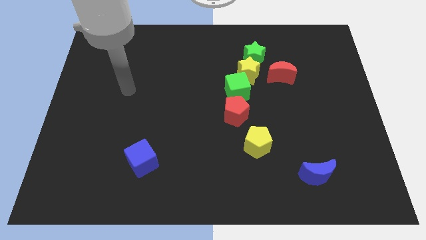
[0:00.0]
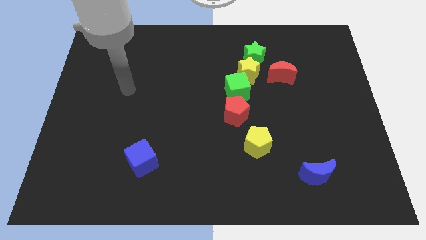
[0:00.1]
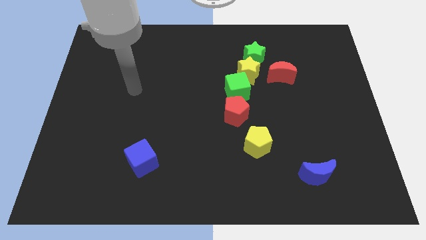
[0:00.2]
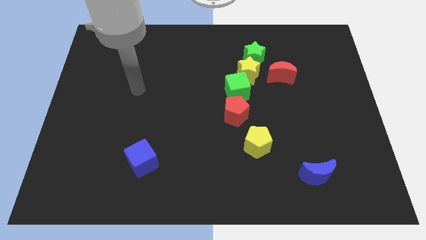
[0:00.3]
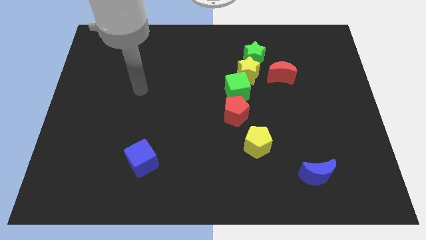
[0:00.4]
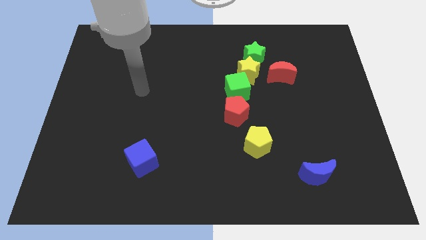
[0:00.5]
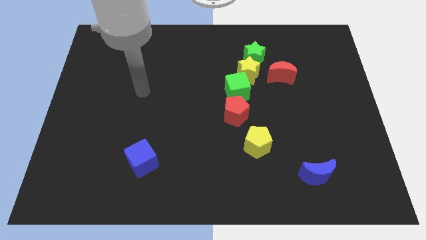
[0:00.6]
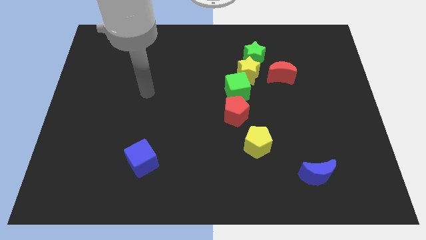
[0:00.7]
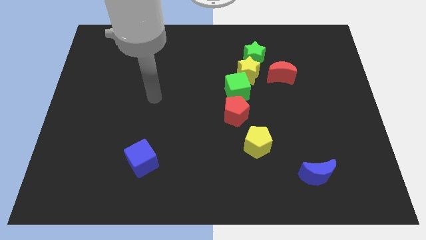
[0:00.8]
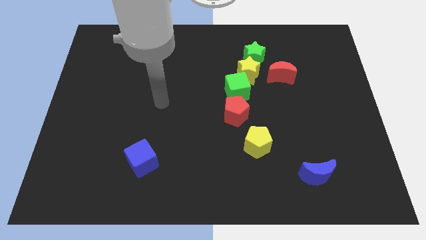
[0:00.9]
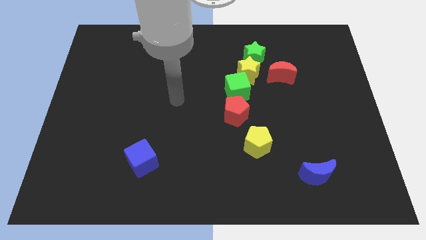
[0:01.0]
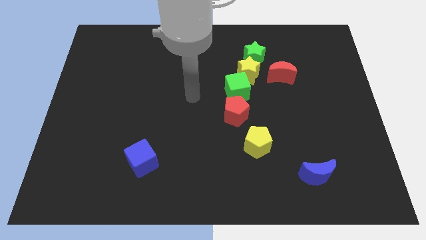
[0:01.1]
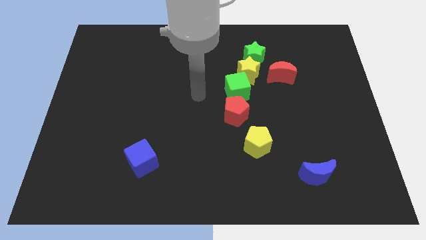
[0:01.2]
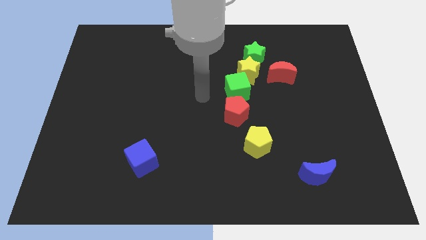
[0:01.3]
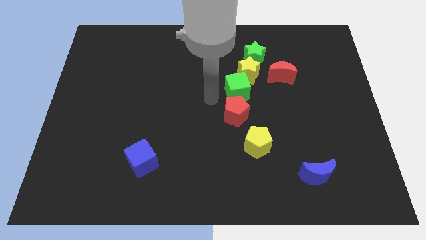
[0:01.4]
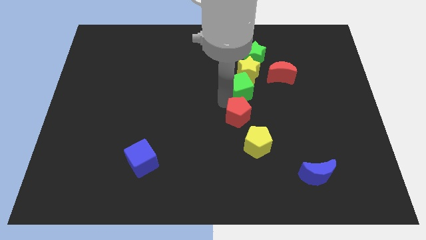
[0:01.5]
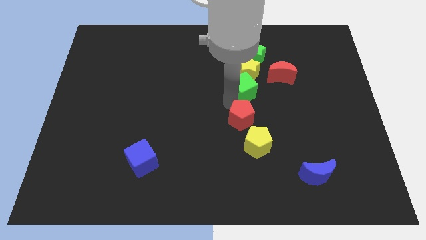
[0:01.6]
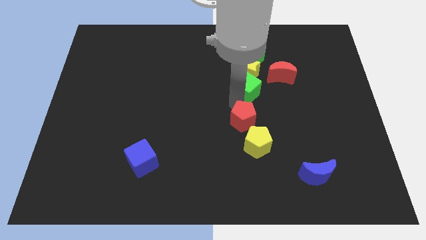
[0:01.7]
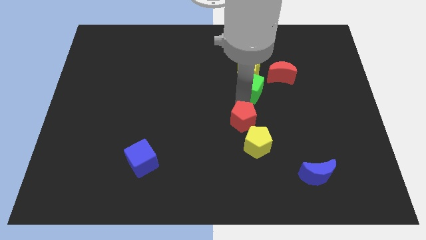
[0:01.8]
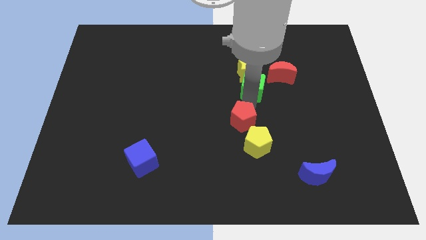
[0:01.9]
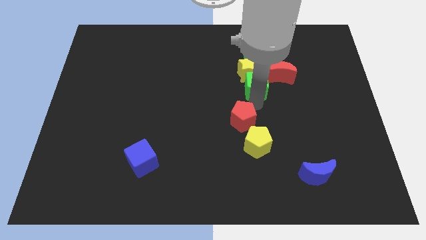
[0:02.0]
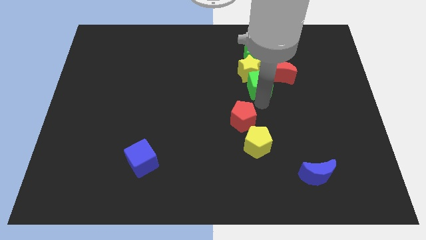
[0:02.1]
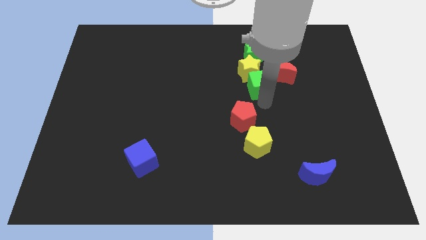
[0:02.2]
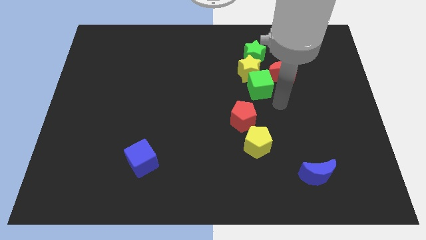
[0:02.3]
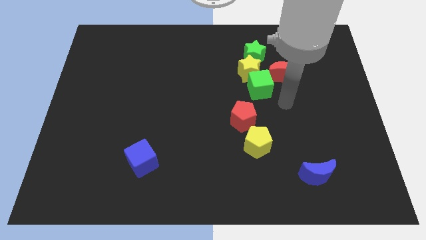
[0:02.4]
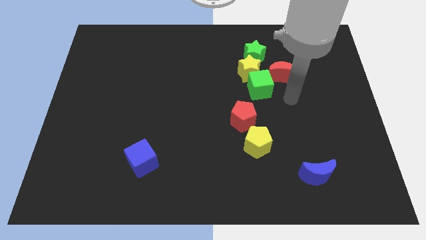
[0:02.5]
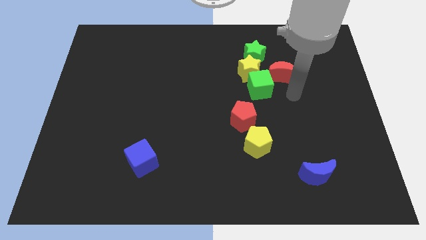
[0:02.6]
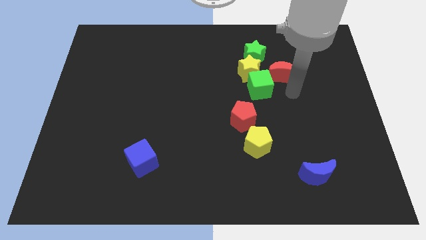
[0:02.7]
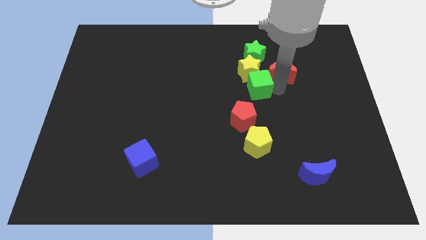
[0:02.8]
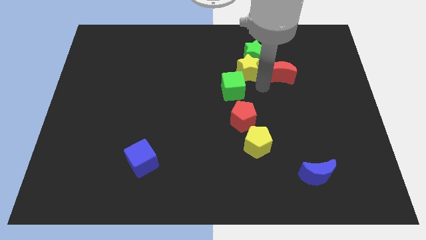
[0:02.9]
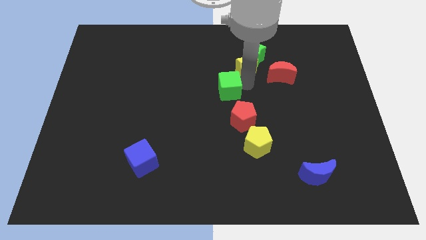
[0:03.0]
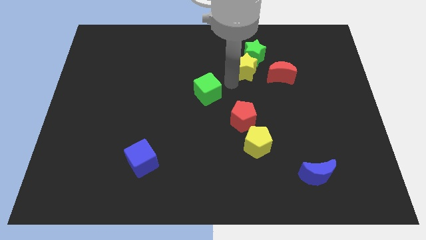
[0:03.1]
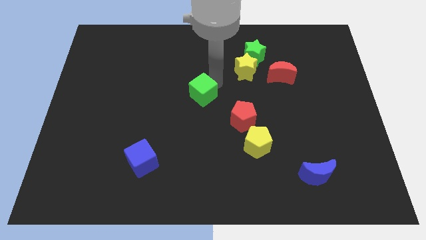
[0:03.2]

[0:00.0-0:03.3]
separate the green cube from the vertical line of blocks

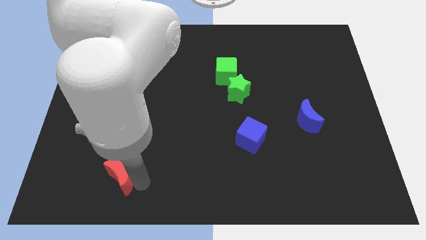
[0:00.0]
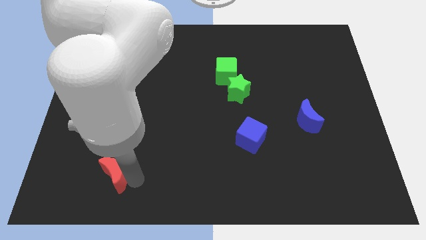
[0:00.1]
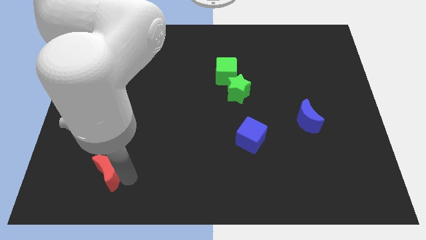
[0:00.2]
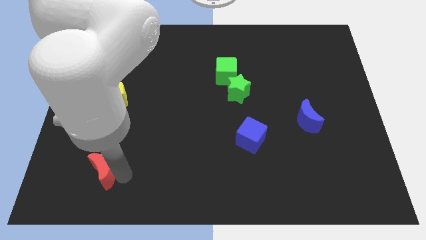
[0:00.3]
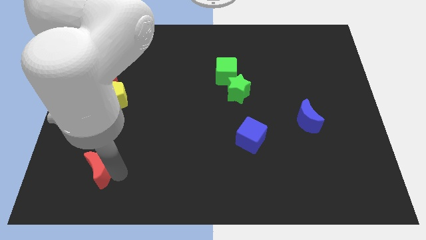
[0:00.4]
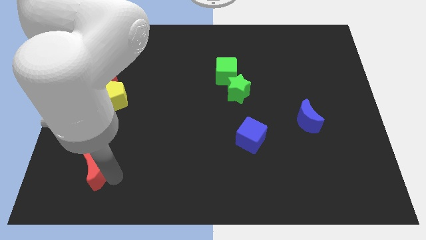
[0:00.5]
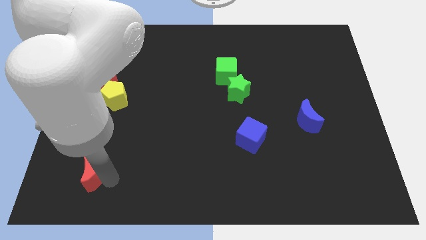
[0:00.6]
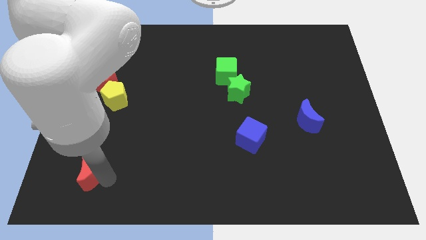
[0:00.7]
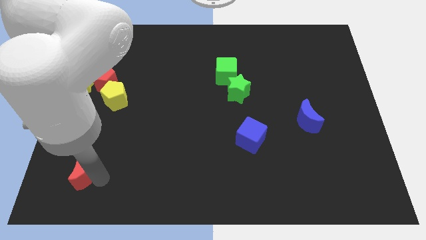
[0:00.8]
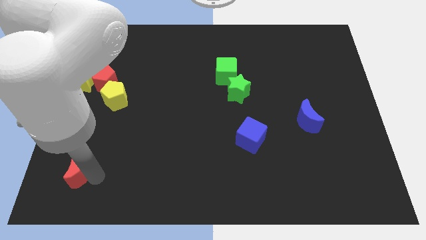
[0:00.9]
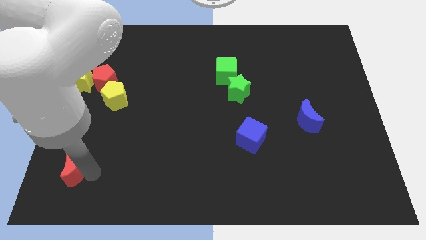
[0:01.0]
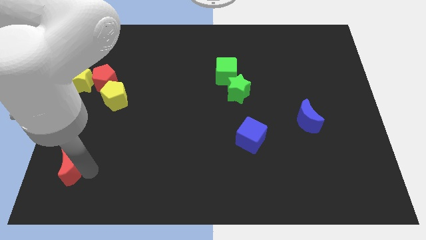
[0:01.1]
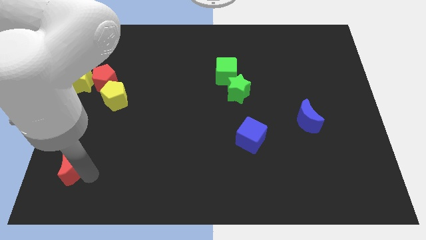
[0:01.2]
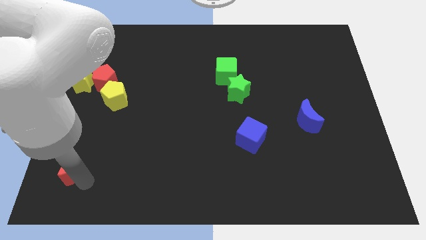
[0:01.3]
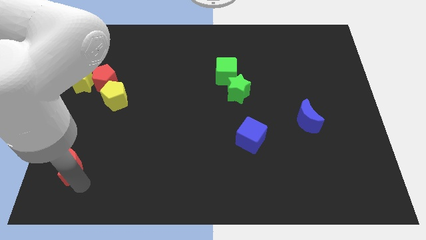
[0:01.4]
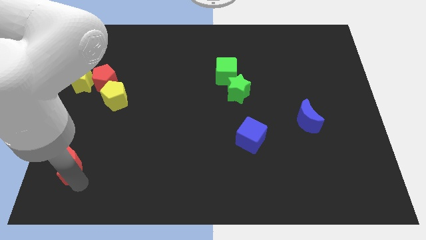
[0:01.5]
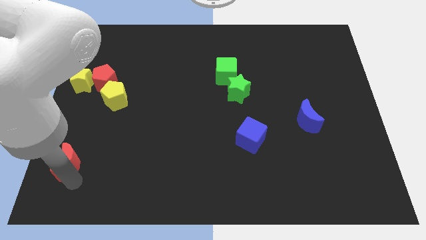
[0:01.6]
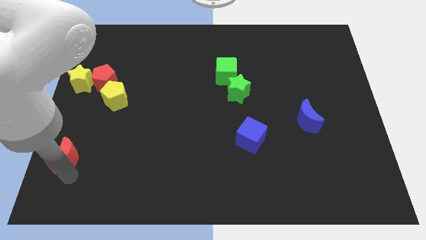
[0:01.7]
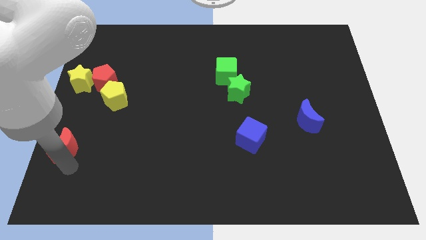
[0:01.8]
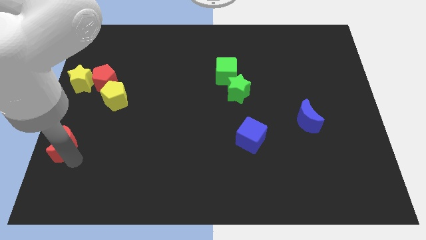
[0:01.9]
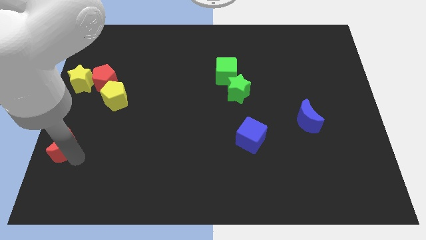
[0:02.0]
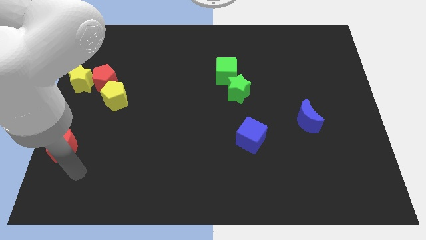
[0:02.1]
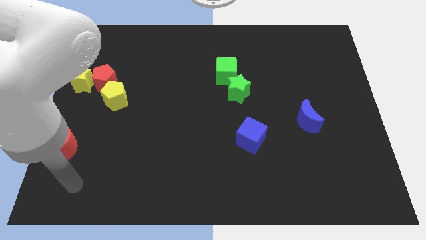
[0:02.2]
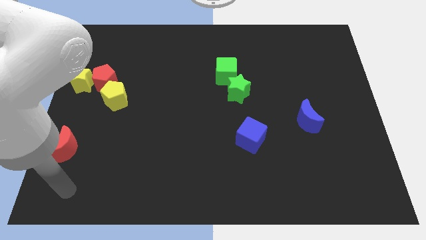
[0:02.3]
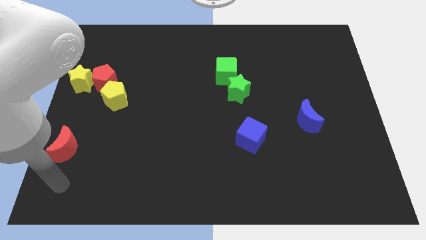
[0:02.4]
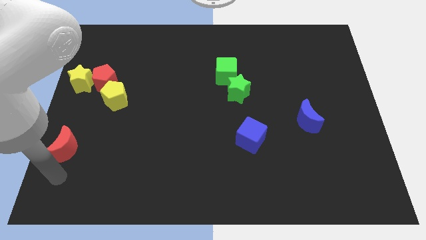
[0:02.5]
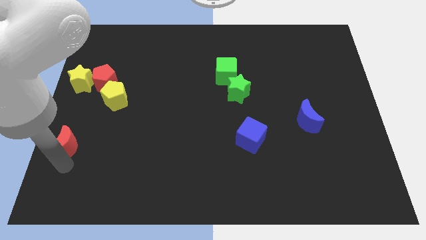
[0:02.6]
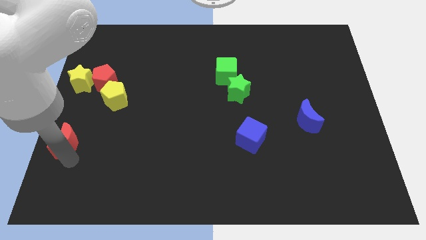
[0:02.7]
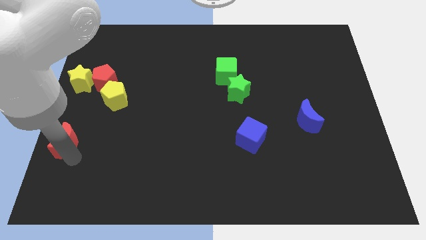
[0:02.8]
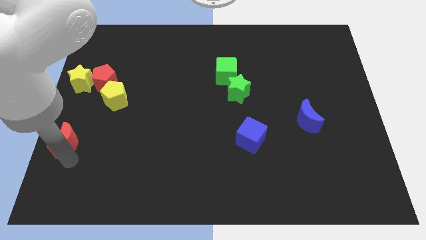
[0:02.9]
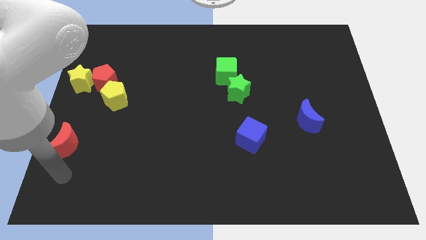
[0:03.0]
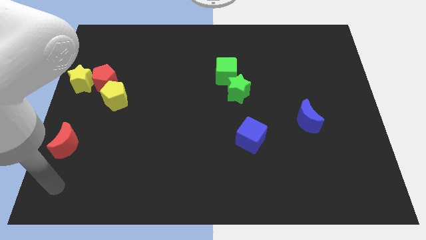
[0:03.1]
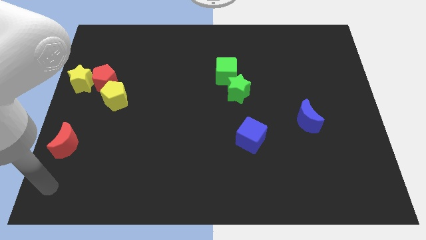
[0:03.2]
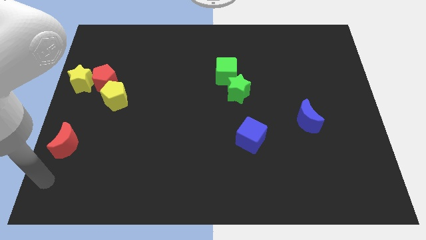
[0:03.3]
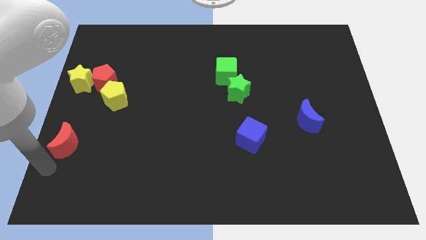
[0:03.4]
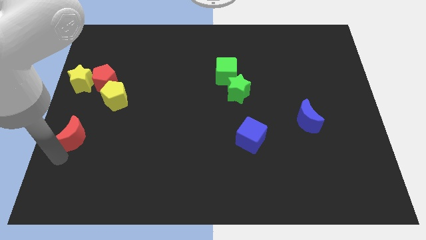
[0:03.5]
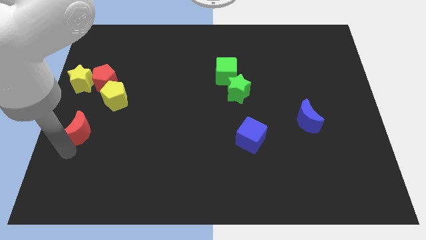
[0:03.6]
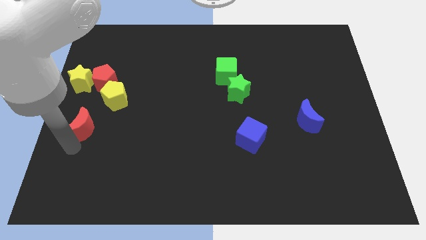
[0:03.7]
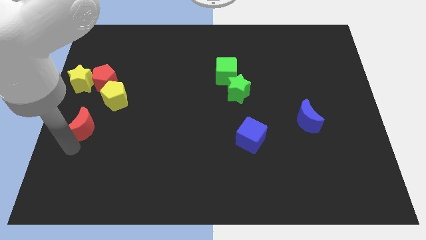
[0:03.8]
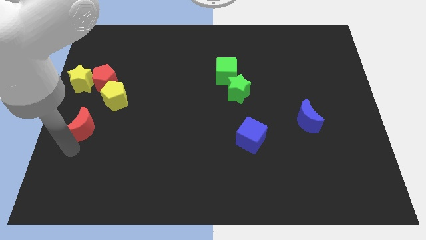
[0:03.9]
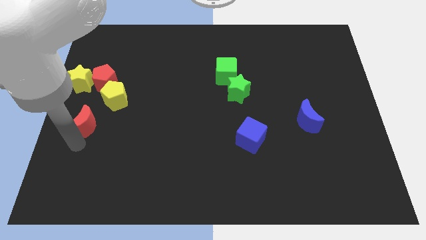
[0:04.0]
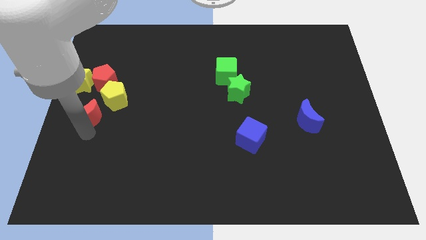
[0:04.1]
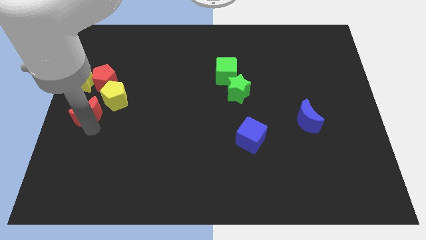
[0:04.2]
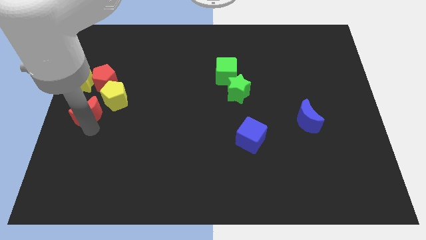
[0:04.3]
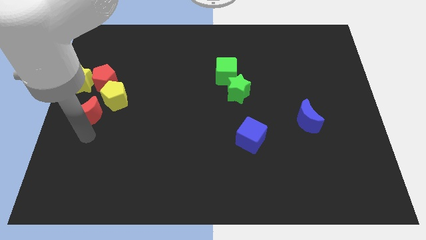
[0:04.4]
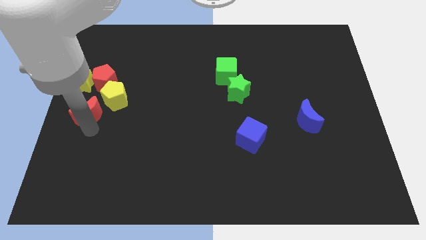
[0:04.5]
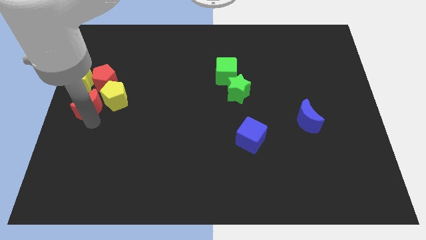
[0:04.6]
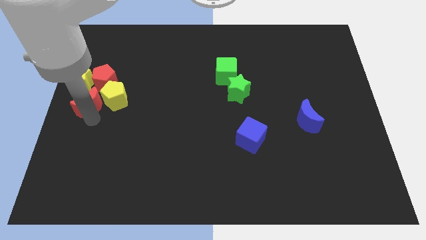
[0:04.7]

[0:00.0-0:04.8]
move the red crescent into the group of the blocks

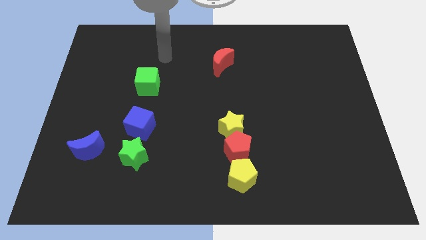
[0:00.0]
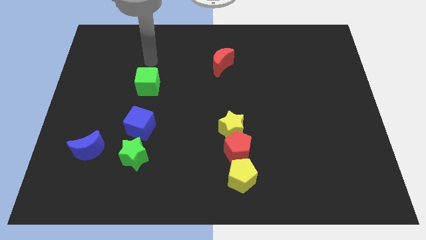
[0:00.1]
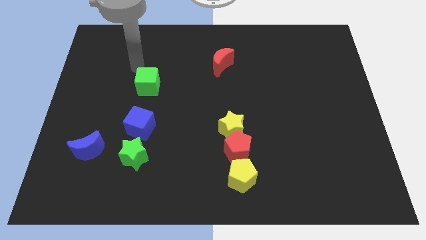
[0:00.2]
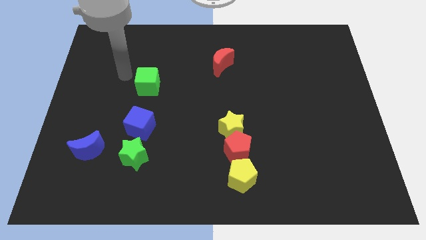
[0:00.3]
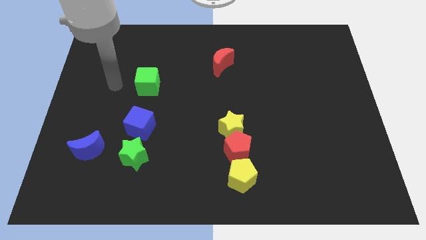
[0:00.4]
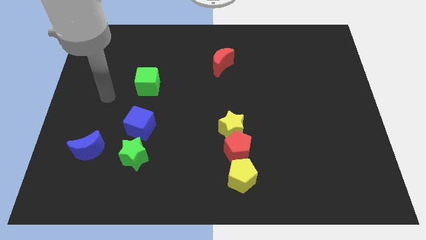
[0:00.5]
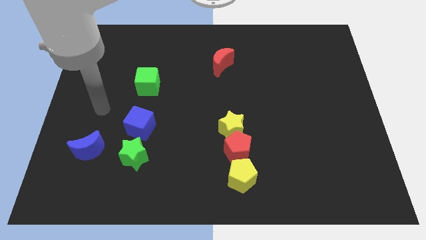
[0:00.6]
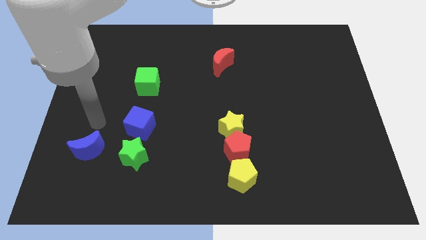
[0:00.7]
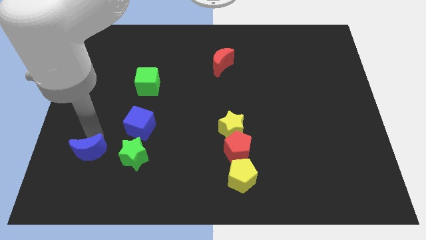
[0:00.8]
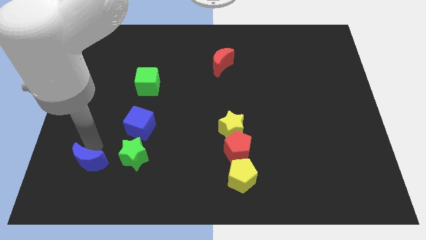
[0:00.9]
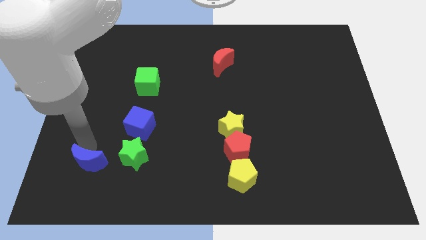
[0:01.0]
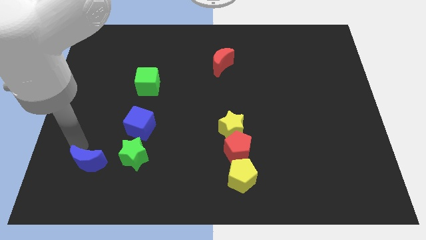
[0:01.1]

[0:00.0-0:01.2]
push the blue moon slightly to the bottom of the board
